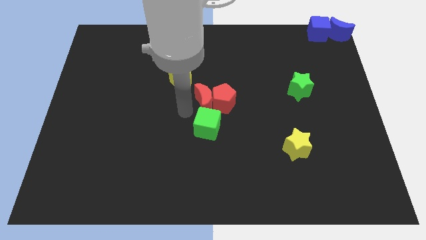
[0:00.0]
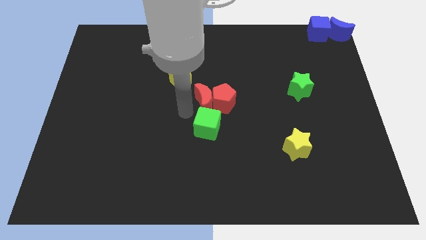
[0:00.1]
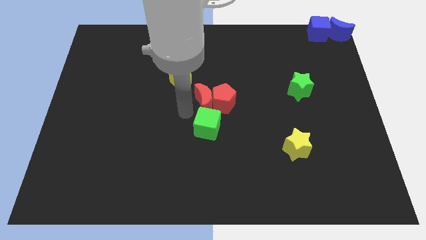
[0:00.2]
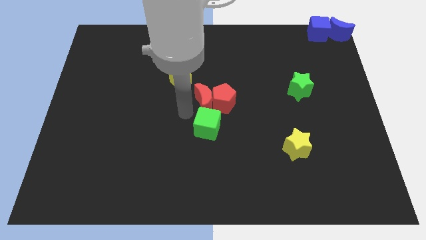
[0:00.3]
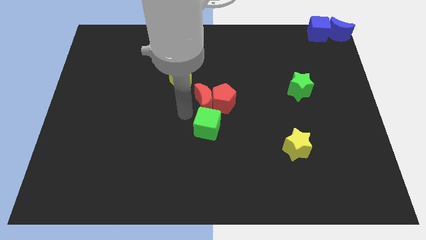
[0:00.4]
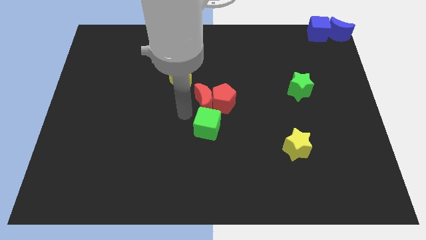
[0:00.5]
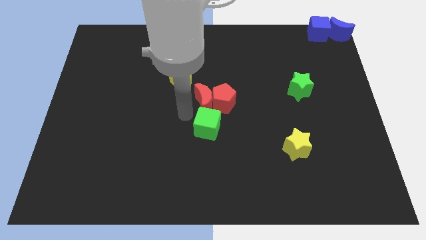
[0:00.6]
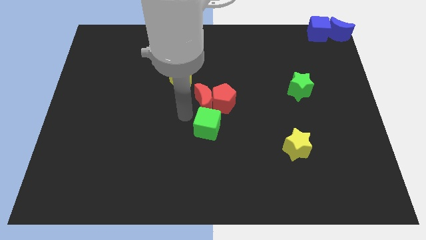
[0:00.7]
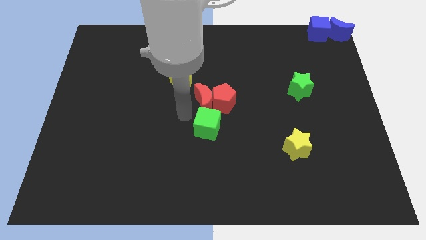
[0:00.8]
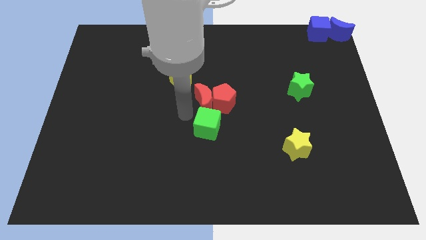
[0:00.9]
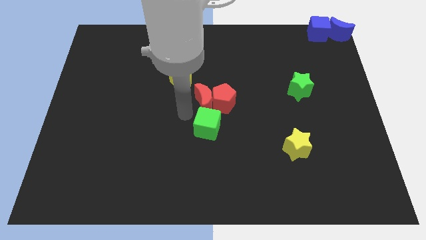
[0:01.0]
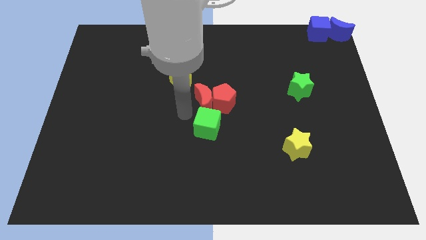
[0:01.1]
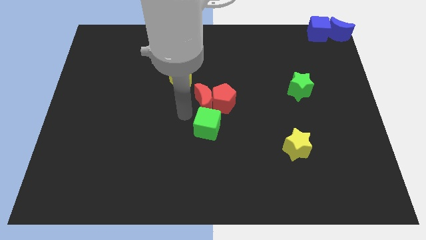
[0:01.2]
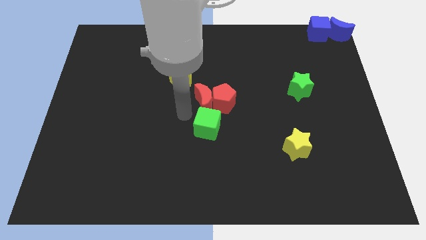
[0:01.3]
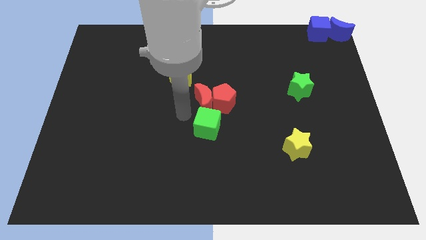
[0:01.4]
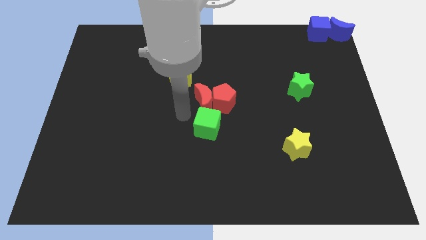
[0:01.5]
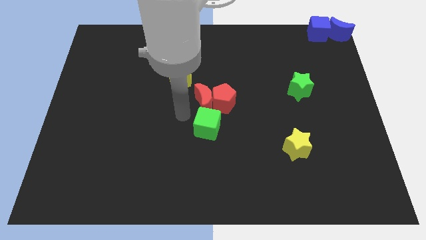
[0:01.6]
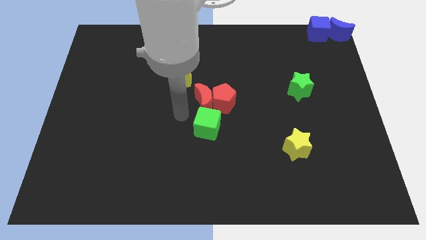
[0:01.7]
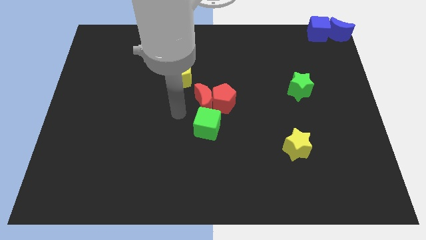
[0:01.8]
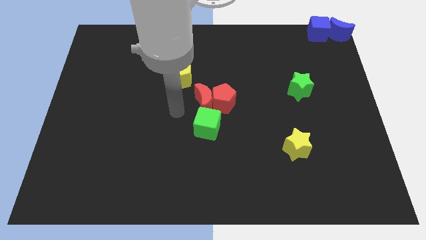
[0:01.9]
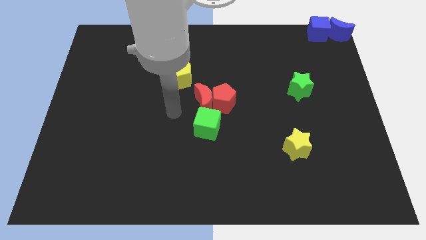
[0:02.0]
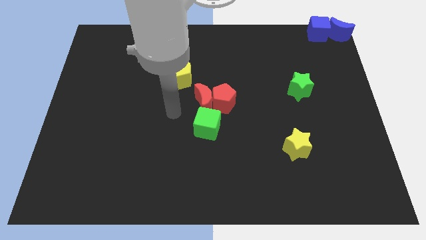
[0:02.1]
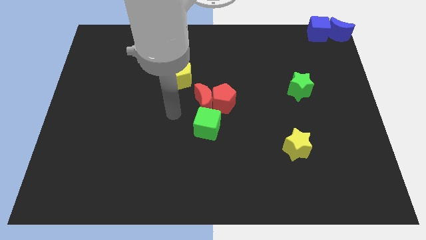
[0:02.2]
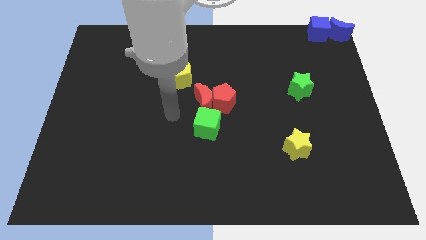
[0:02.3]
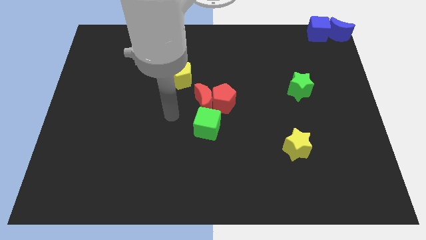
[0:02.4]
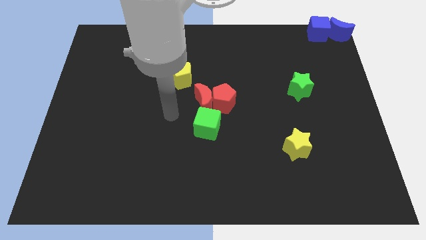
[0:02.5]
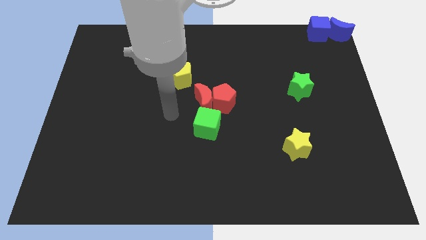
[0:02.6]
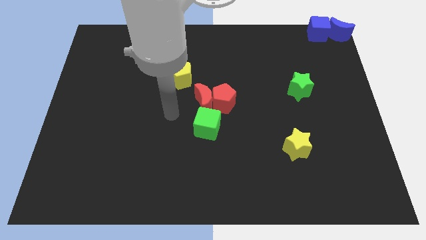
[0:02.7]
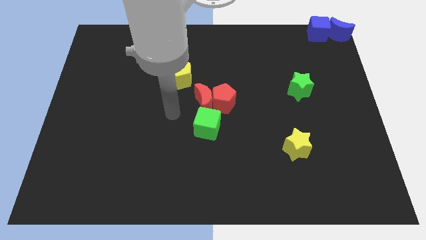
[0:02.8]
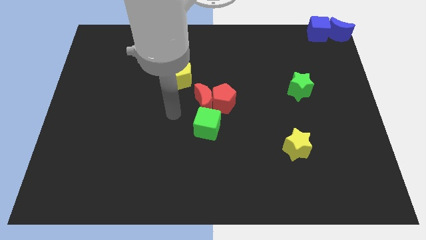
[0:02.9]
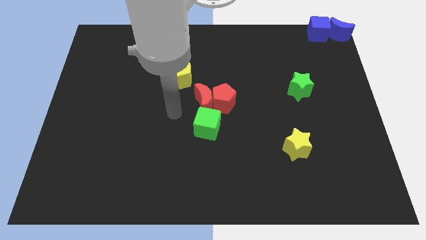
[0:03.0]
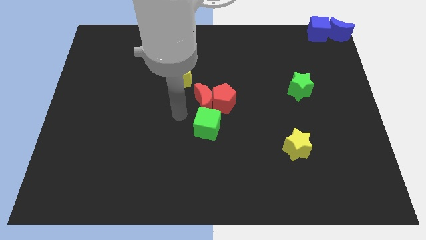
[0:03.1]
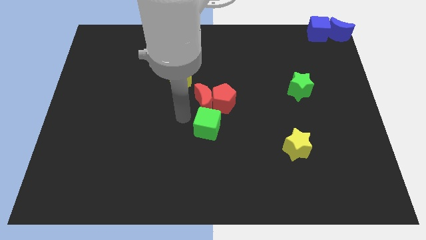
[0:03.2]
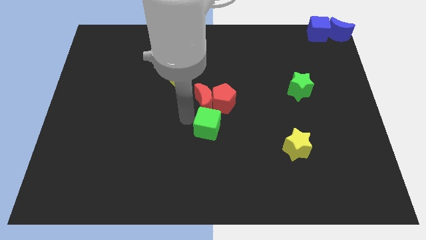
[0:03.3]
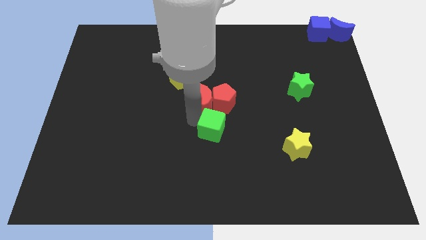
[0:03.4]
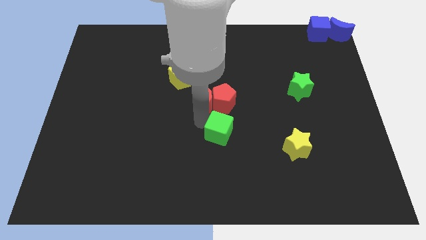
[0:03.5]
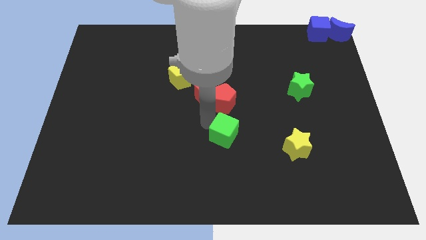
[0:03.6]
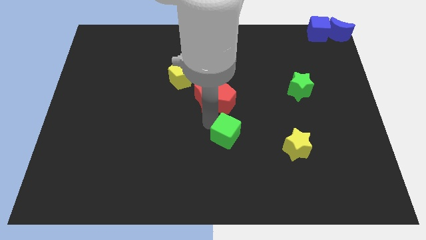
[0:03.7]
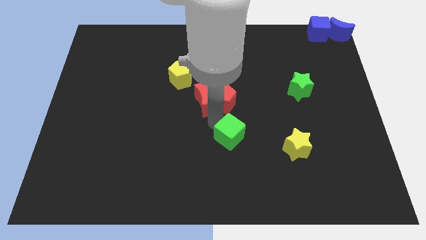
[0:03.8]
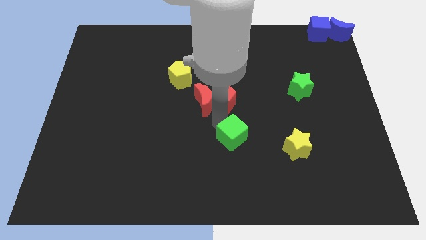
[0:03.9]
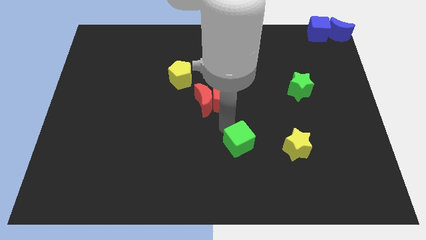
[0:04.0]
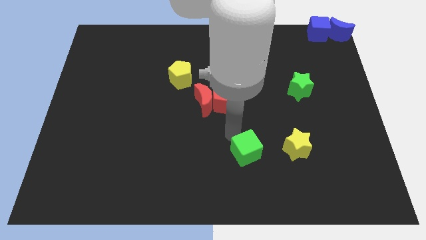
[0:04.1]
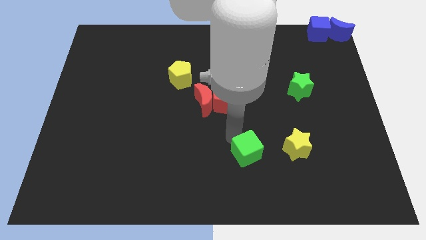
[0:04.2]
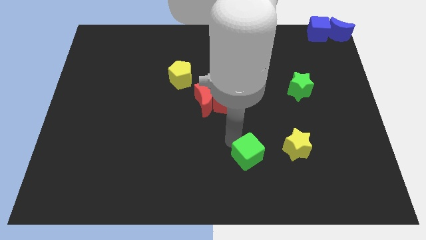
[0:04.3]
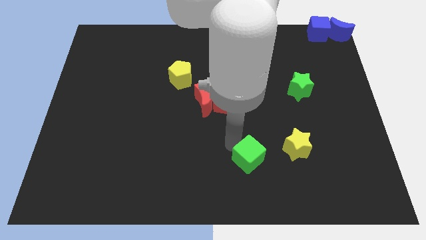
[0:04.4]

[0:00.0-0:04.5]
push the green cube away from the group of red blocks

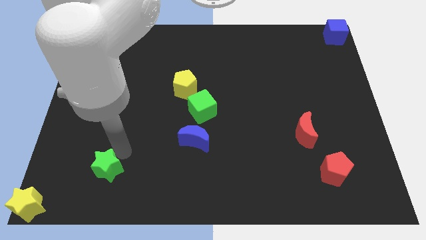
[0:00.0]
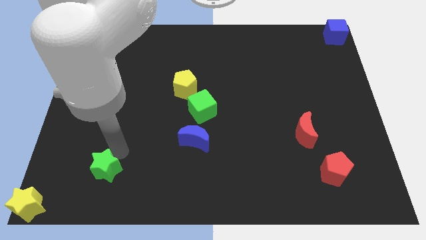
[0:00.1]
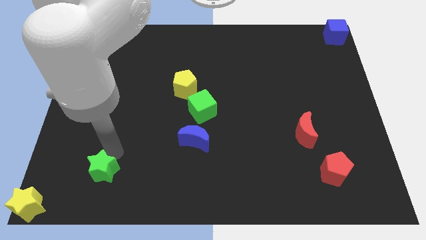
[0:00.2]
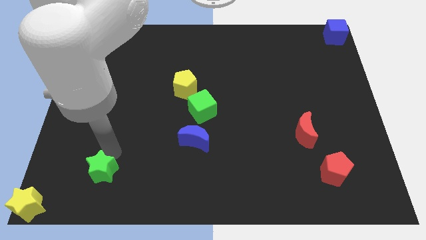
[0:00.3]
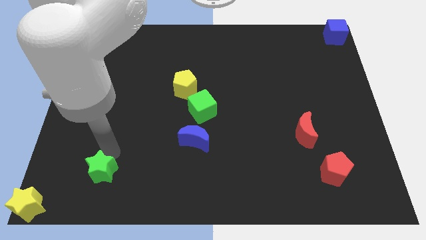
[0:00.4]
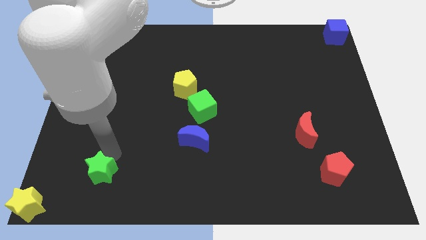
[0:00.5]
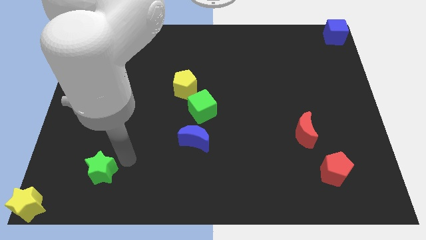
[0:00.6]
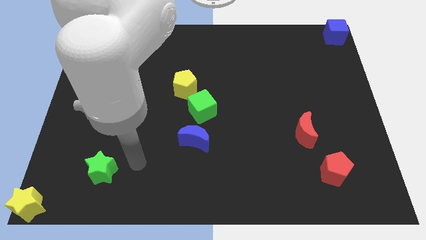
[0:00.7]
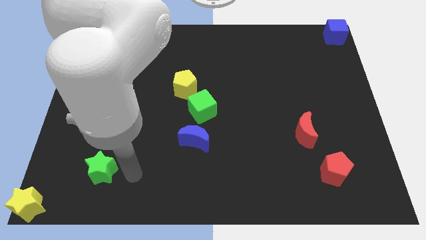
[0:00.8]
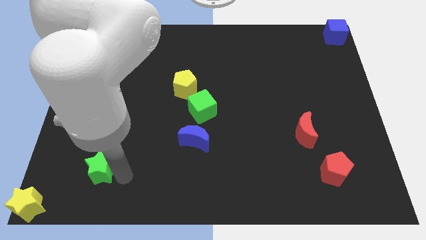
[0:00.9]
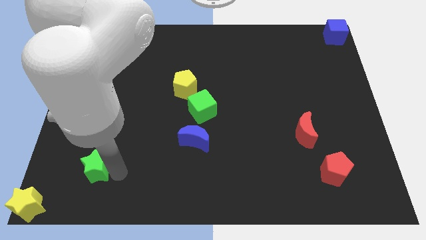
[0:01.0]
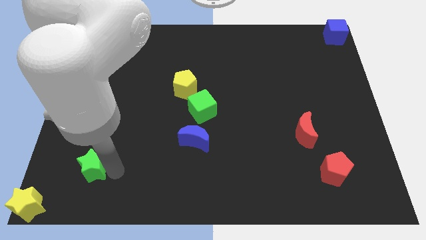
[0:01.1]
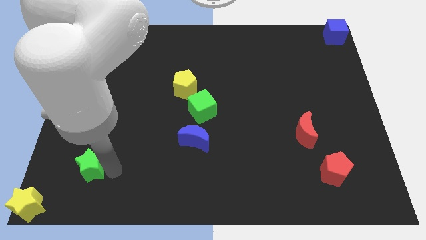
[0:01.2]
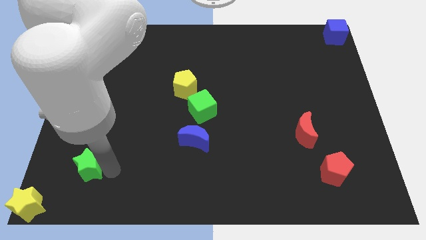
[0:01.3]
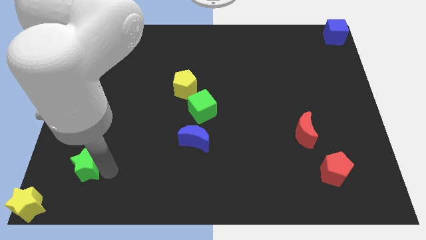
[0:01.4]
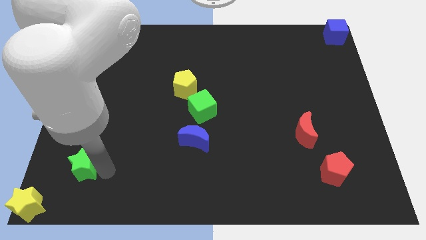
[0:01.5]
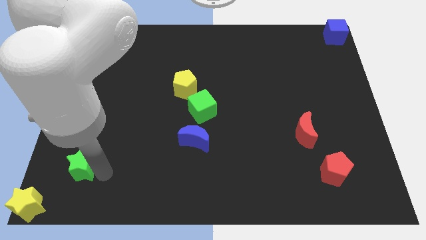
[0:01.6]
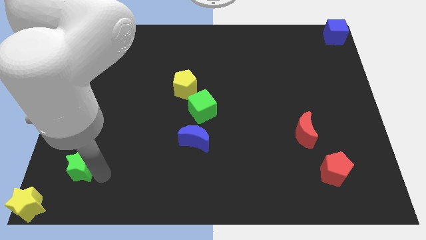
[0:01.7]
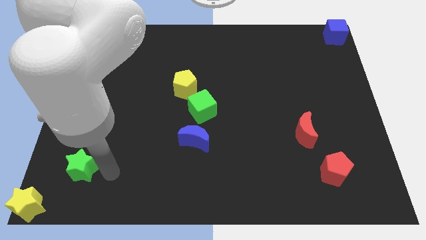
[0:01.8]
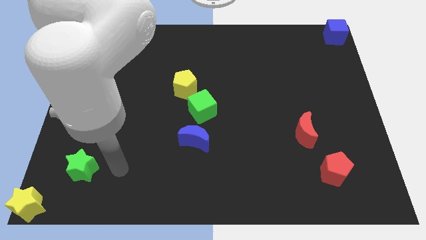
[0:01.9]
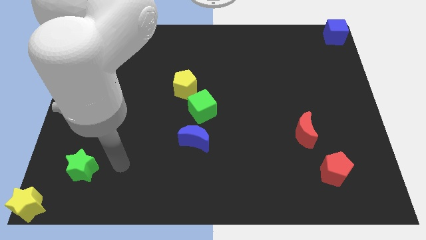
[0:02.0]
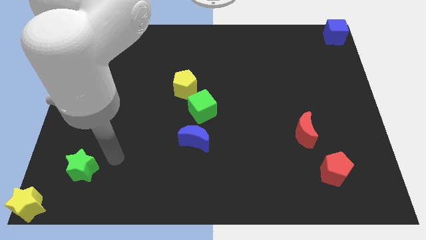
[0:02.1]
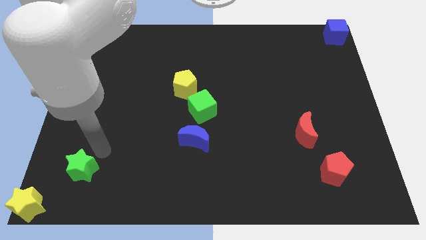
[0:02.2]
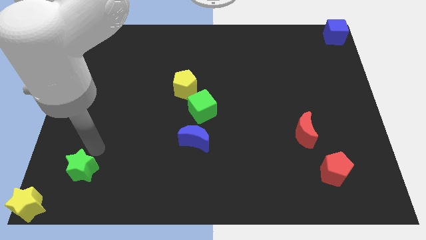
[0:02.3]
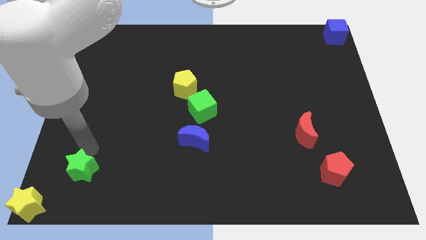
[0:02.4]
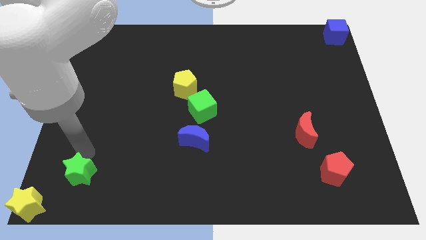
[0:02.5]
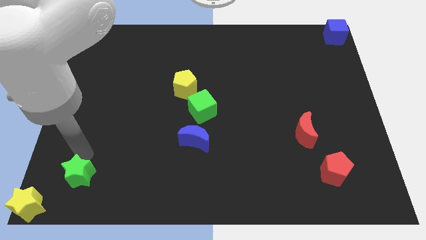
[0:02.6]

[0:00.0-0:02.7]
slide the green star towards the bottom left

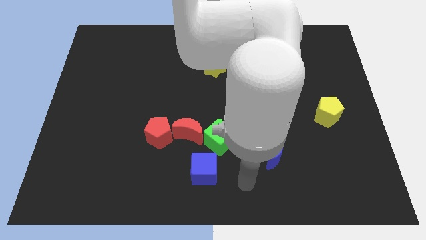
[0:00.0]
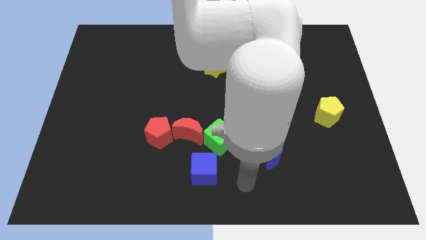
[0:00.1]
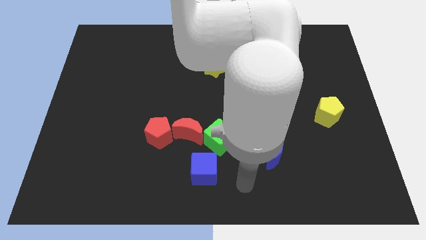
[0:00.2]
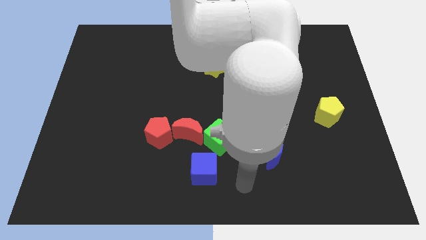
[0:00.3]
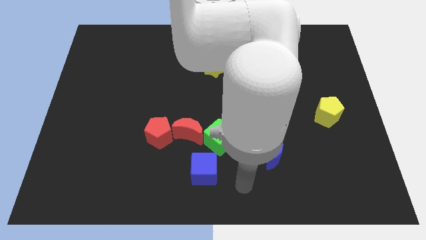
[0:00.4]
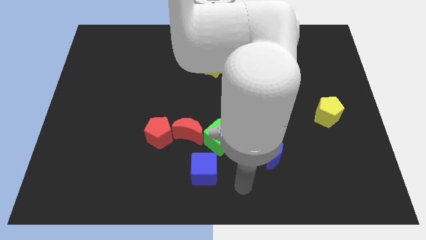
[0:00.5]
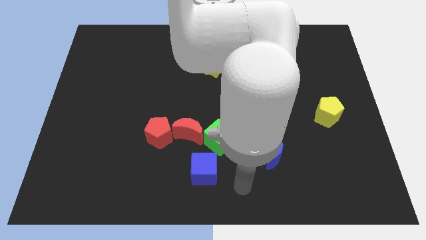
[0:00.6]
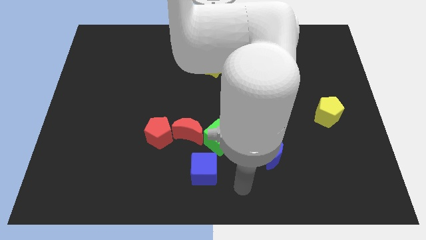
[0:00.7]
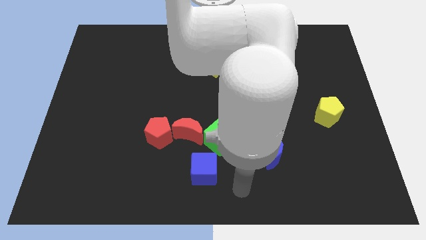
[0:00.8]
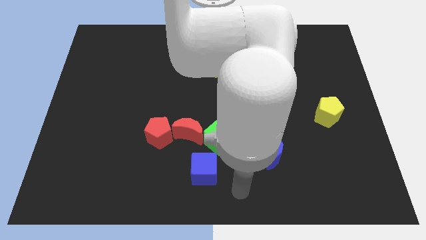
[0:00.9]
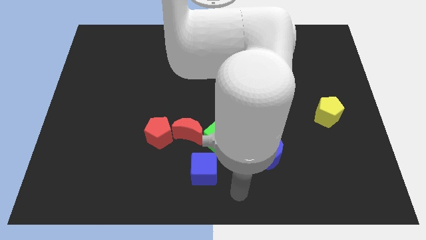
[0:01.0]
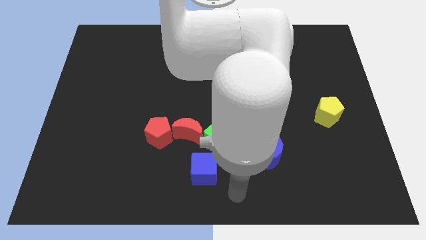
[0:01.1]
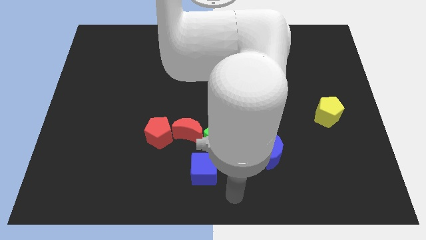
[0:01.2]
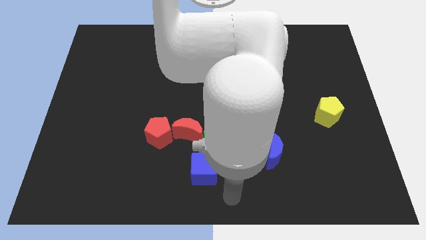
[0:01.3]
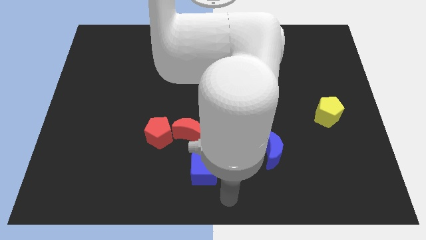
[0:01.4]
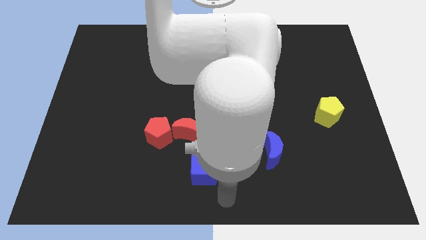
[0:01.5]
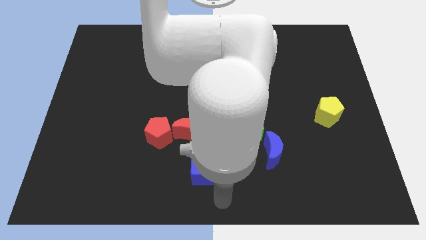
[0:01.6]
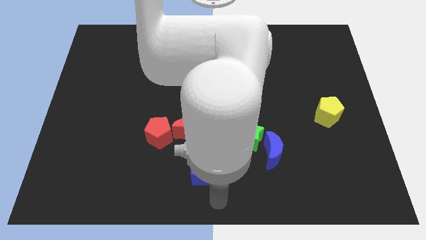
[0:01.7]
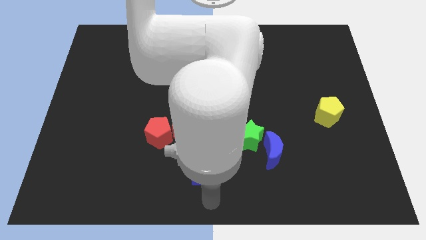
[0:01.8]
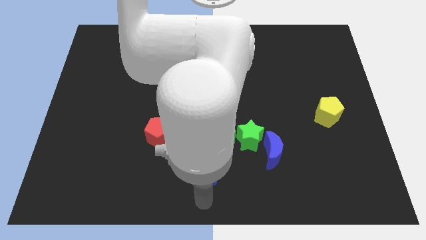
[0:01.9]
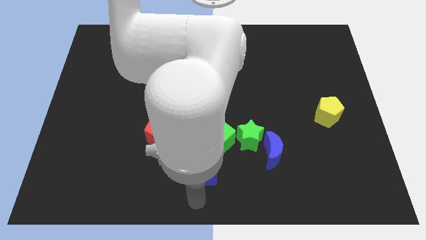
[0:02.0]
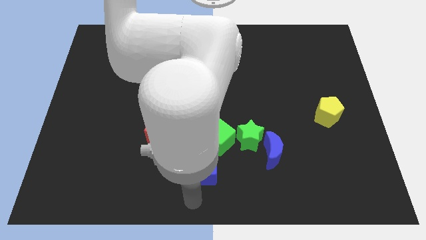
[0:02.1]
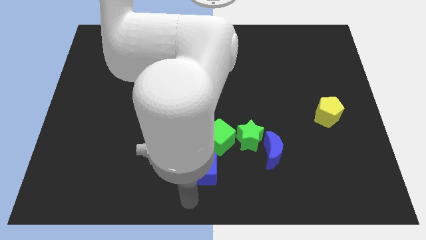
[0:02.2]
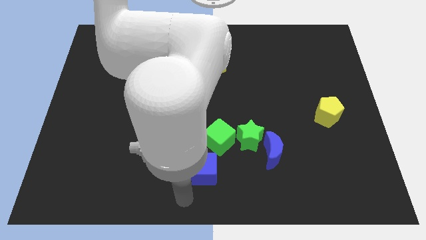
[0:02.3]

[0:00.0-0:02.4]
move the arm towards the blue cube
